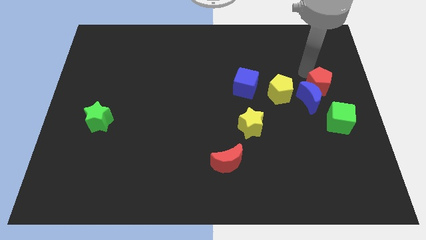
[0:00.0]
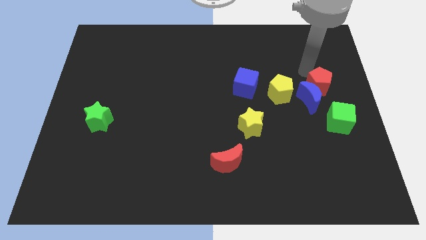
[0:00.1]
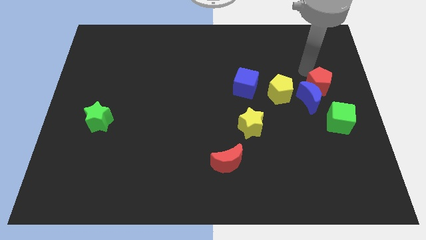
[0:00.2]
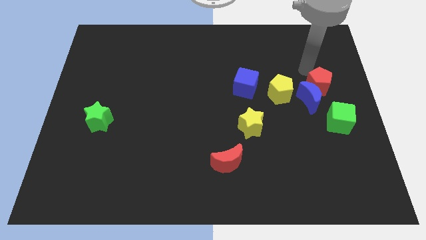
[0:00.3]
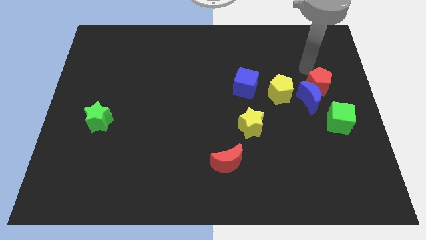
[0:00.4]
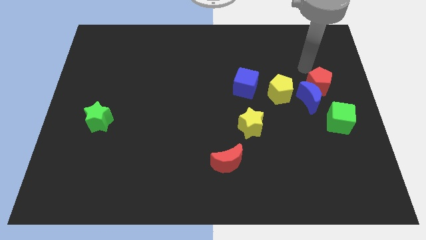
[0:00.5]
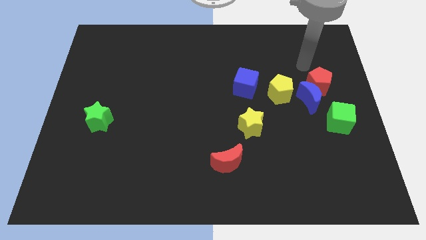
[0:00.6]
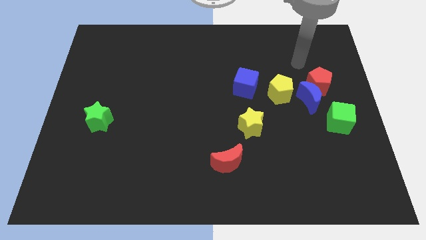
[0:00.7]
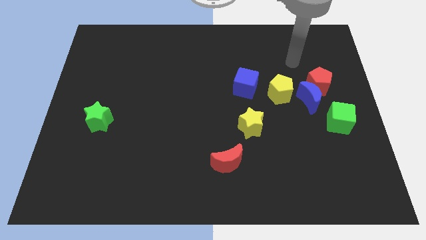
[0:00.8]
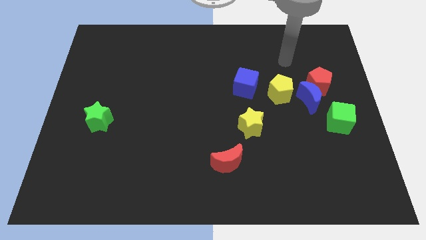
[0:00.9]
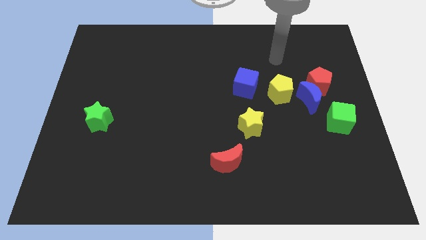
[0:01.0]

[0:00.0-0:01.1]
move your arm away from red pentagon

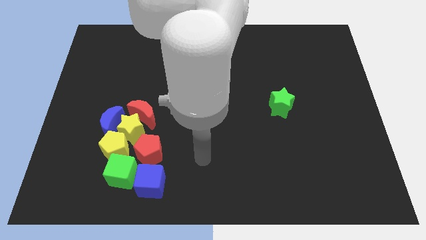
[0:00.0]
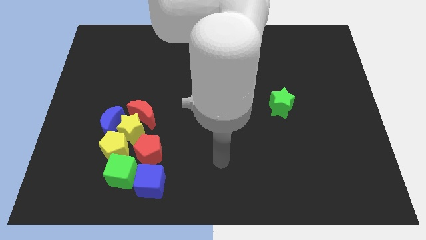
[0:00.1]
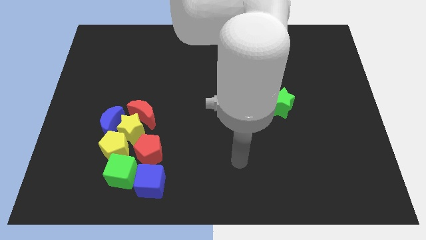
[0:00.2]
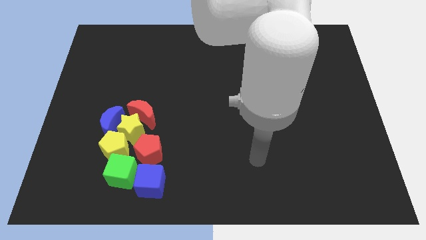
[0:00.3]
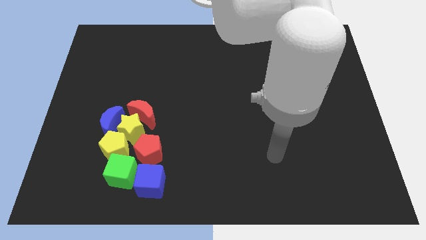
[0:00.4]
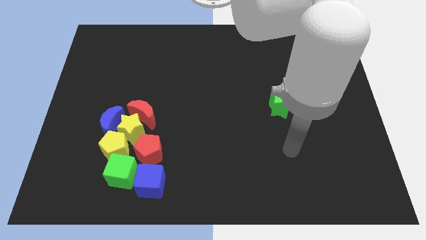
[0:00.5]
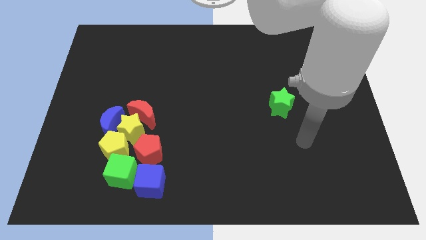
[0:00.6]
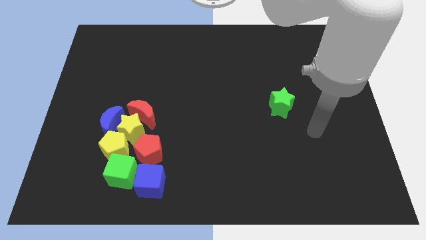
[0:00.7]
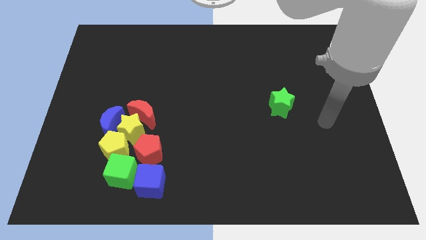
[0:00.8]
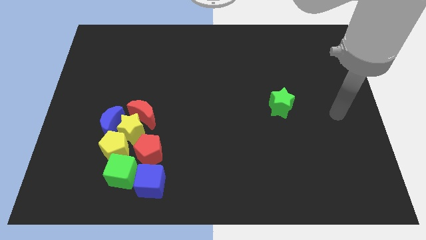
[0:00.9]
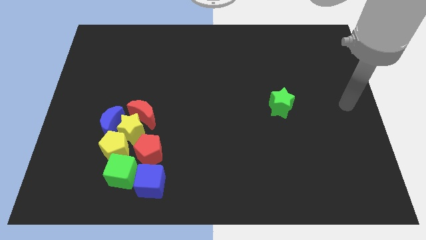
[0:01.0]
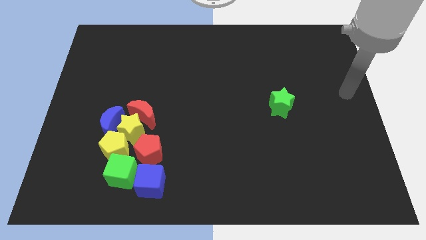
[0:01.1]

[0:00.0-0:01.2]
move your arm towards the right of the green star

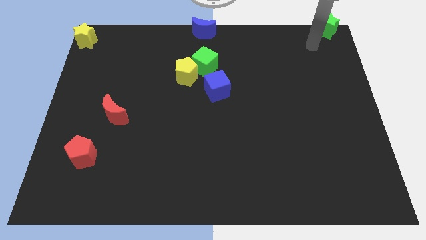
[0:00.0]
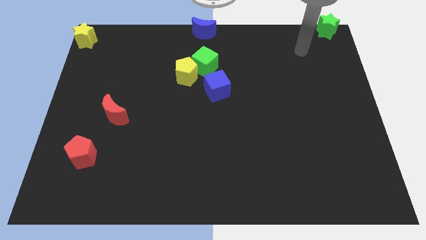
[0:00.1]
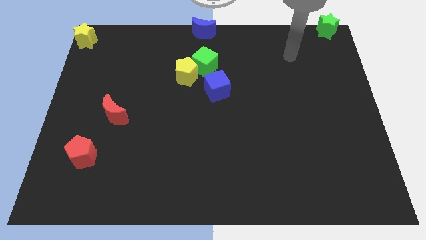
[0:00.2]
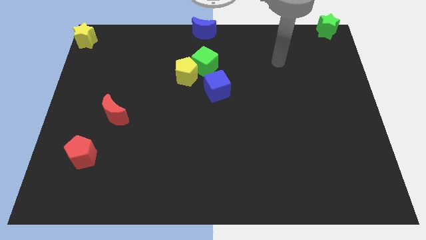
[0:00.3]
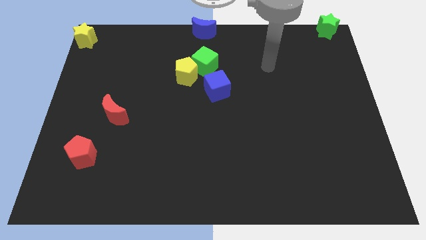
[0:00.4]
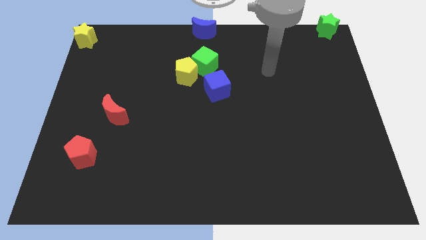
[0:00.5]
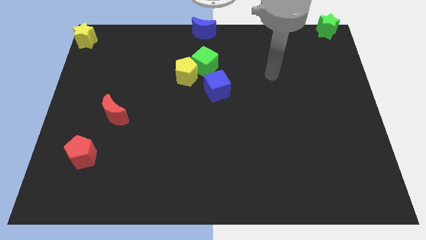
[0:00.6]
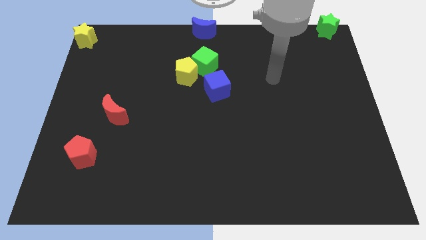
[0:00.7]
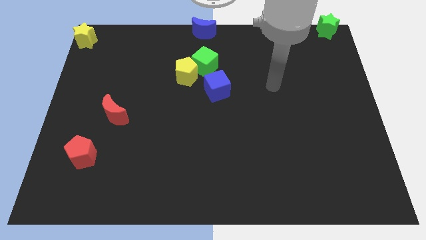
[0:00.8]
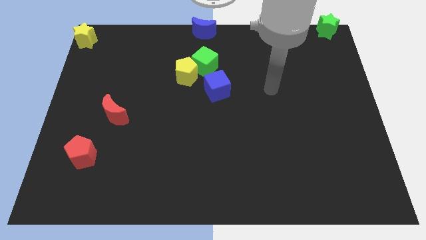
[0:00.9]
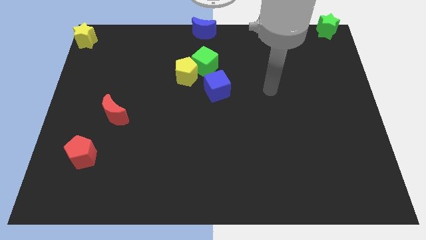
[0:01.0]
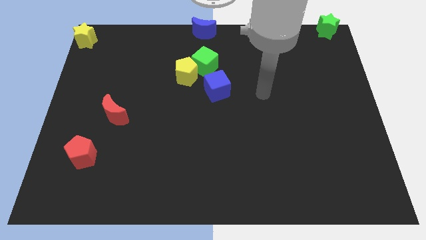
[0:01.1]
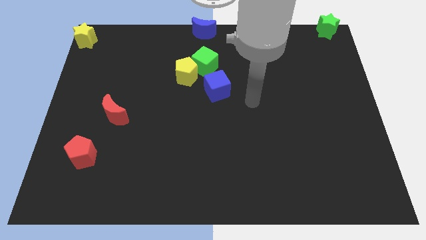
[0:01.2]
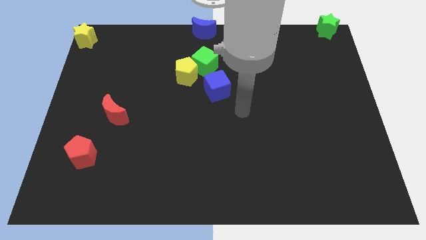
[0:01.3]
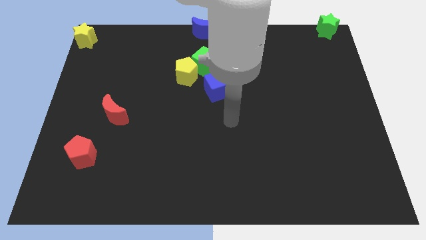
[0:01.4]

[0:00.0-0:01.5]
point your arm at the center of the board

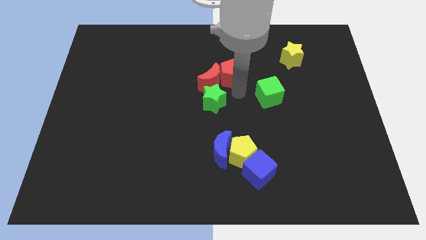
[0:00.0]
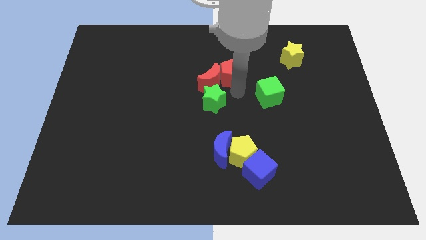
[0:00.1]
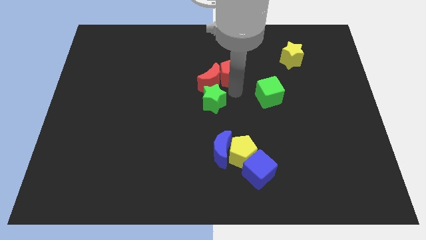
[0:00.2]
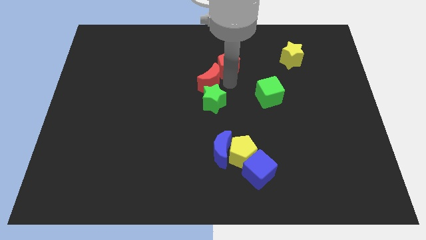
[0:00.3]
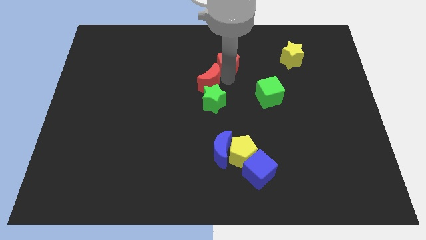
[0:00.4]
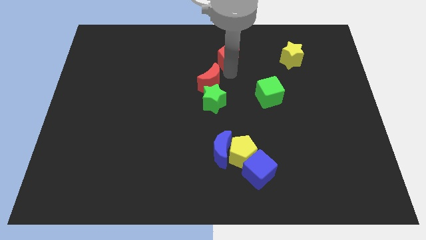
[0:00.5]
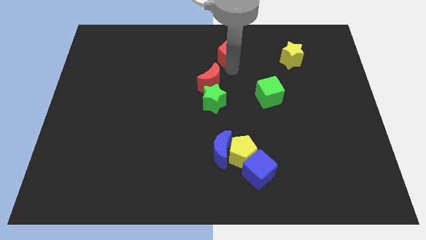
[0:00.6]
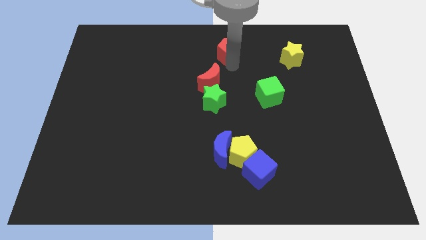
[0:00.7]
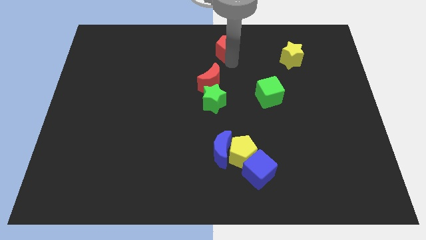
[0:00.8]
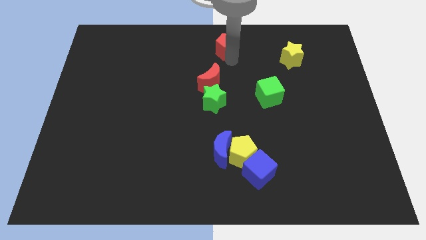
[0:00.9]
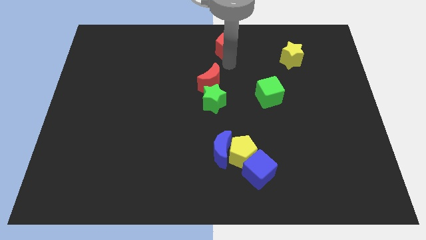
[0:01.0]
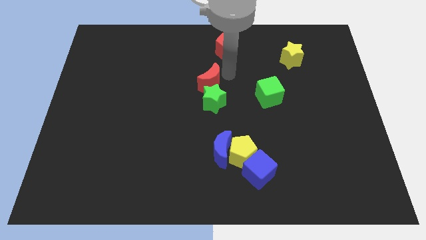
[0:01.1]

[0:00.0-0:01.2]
push the red pentagon to the top center

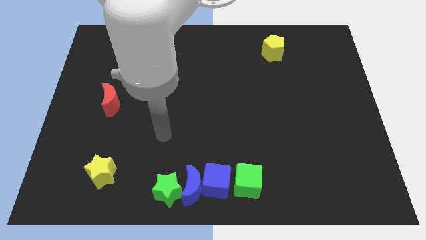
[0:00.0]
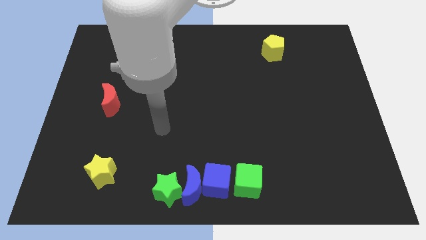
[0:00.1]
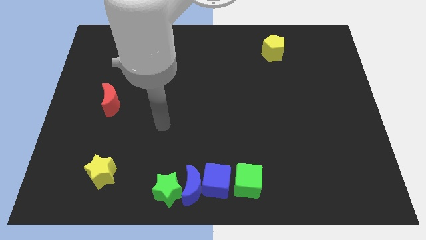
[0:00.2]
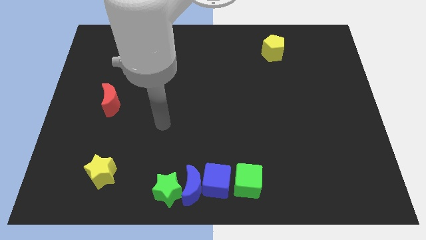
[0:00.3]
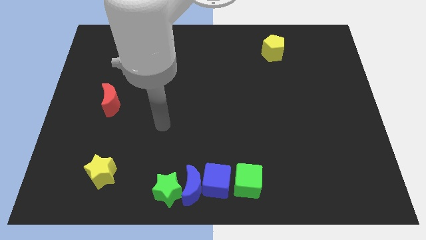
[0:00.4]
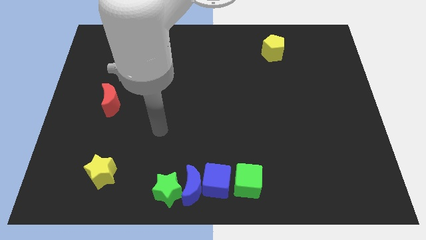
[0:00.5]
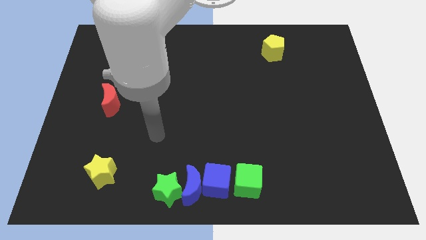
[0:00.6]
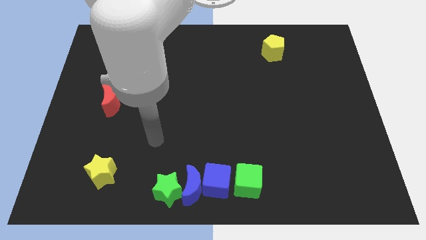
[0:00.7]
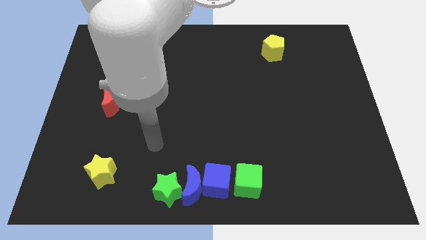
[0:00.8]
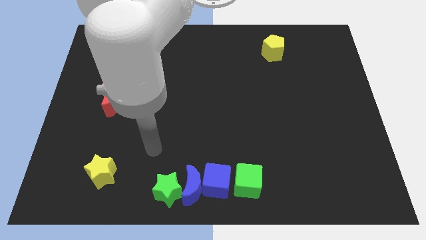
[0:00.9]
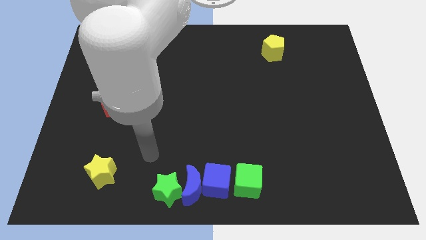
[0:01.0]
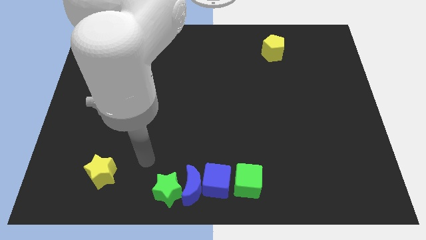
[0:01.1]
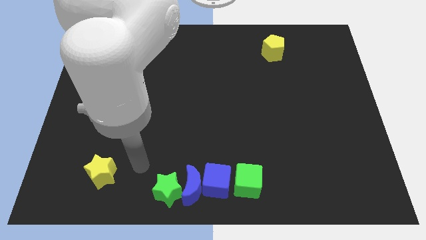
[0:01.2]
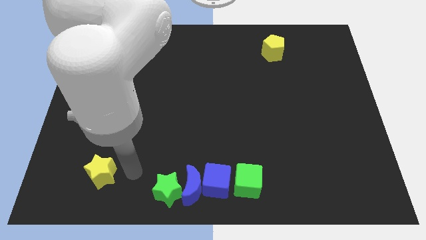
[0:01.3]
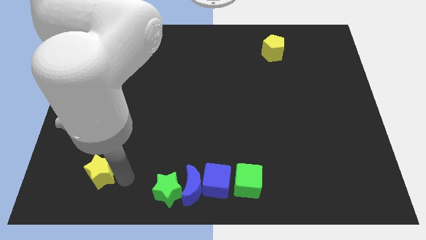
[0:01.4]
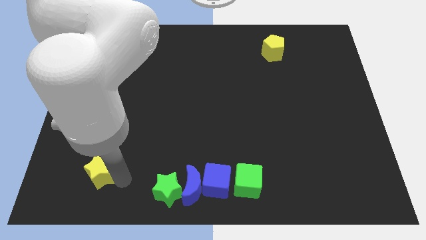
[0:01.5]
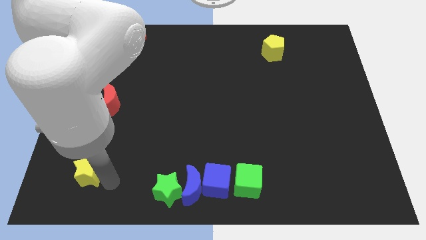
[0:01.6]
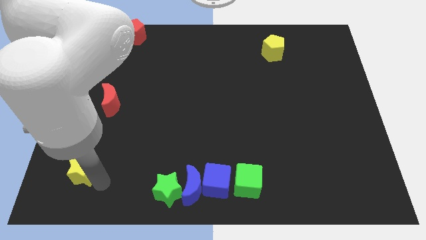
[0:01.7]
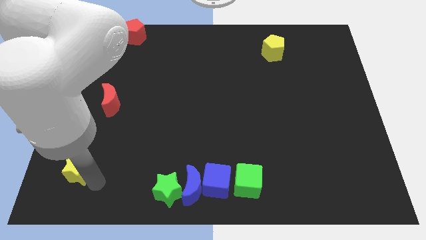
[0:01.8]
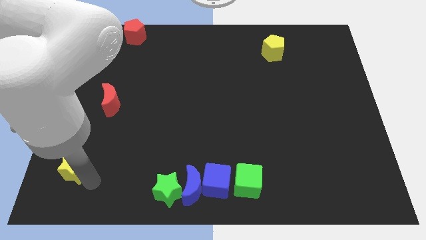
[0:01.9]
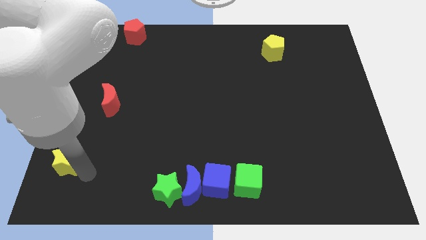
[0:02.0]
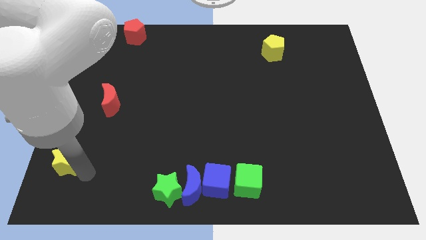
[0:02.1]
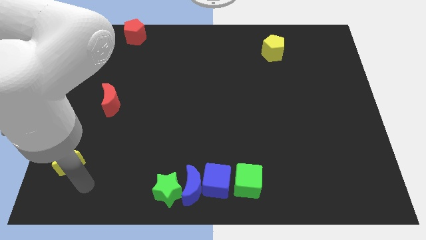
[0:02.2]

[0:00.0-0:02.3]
slightly push the yellow star to the left

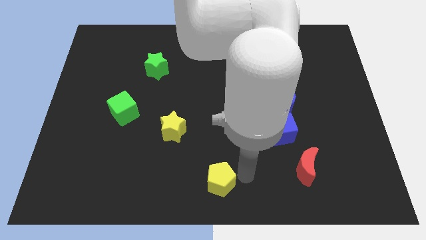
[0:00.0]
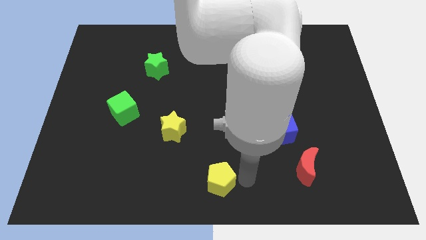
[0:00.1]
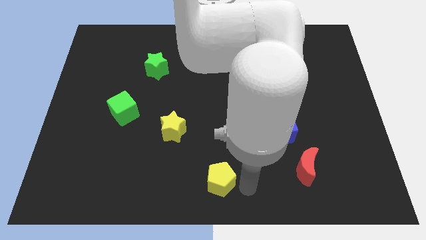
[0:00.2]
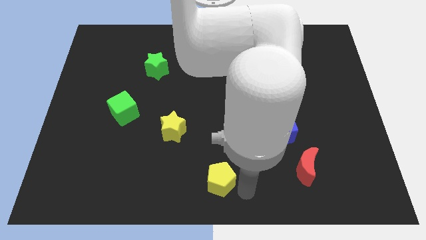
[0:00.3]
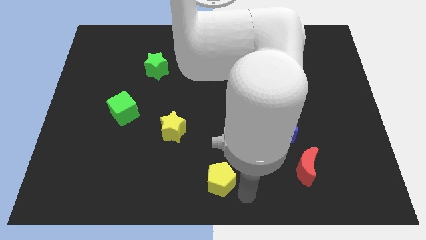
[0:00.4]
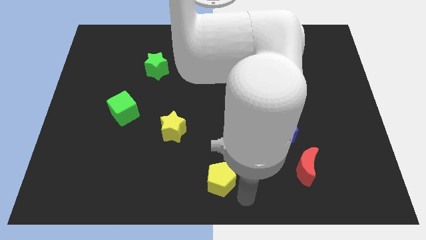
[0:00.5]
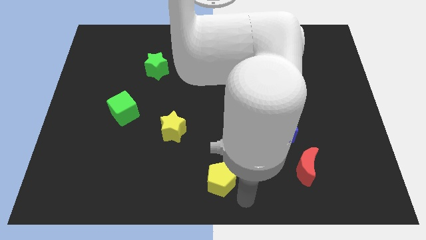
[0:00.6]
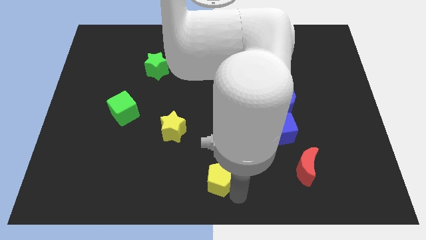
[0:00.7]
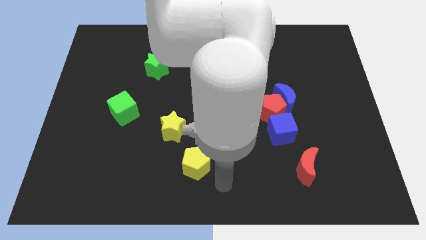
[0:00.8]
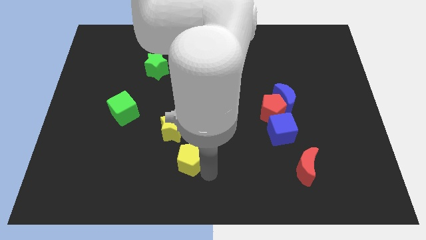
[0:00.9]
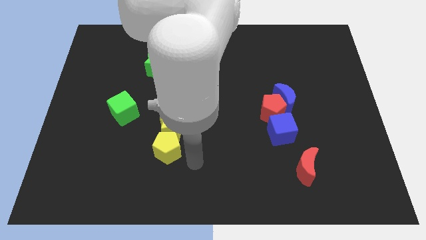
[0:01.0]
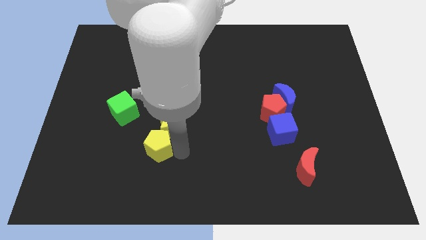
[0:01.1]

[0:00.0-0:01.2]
move yellow pentagon to the bottom side of the yellow star

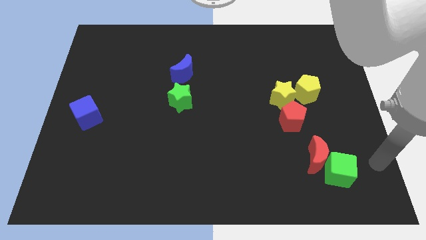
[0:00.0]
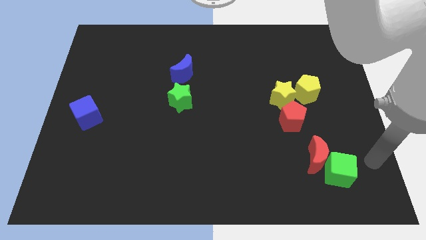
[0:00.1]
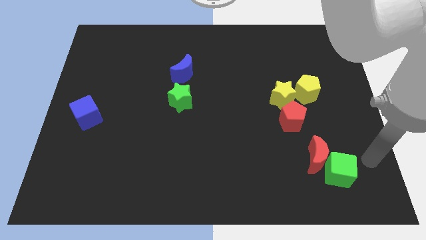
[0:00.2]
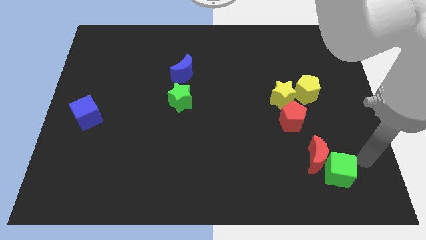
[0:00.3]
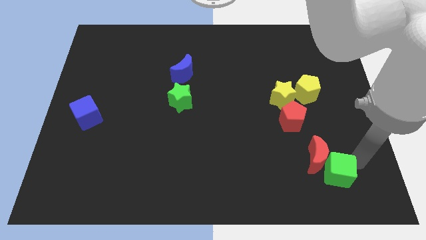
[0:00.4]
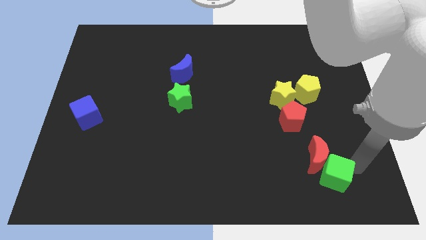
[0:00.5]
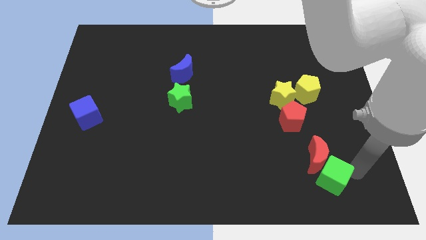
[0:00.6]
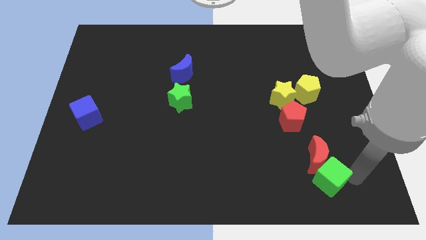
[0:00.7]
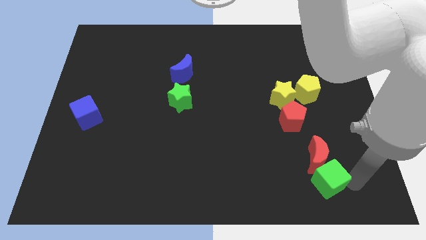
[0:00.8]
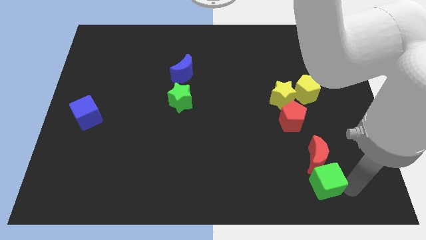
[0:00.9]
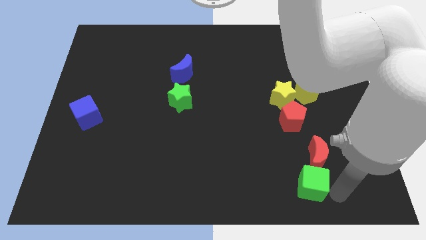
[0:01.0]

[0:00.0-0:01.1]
slide the green cube below red moon
